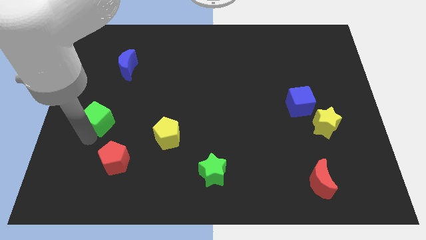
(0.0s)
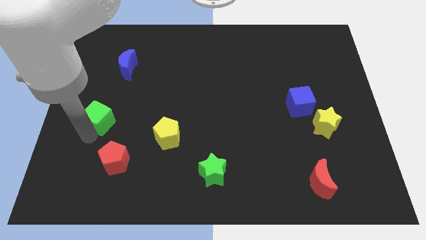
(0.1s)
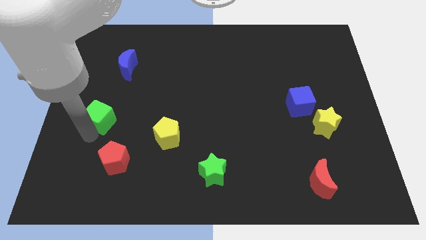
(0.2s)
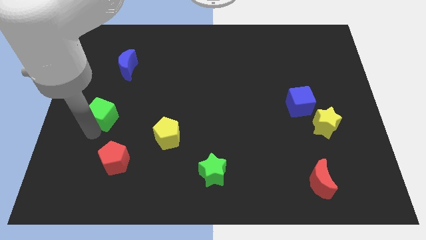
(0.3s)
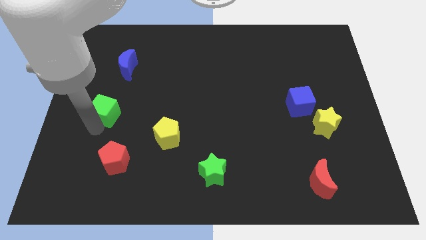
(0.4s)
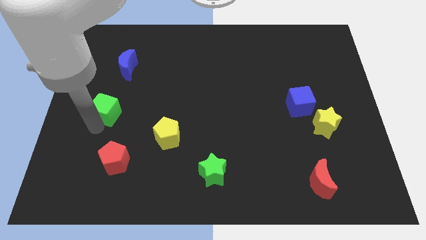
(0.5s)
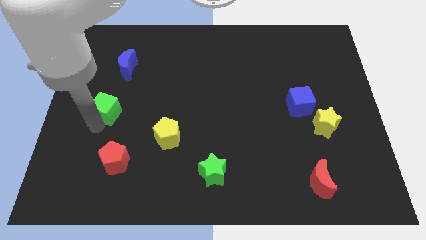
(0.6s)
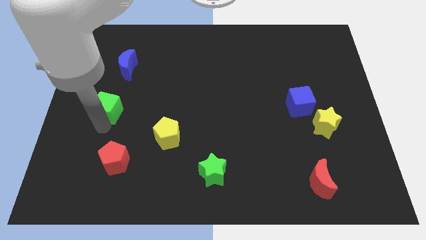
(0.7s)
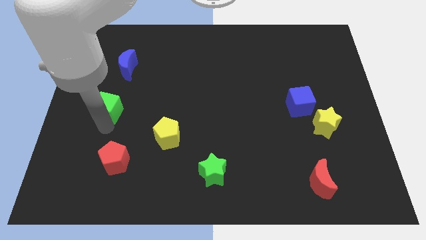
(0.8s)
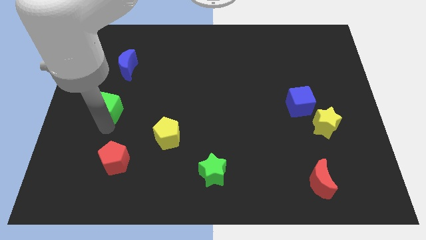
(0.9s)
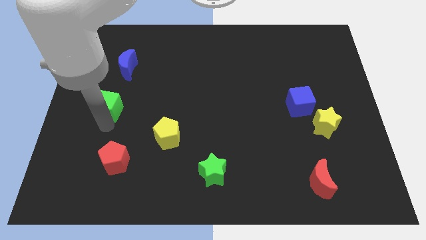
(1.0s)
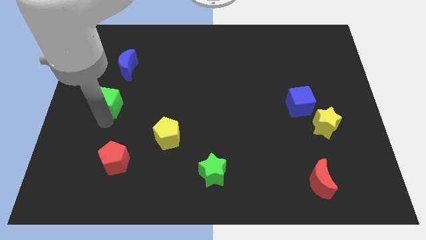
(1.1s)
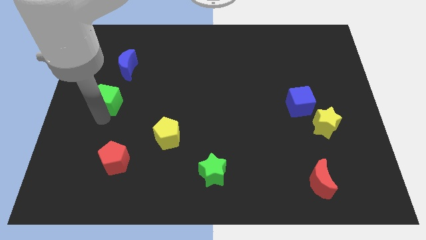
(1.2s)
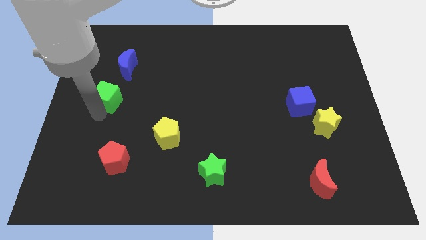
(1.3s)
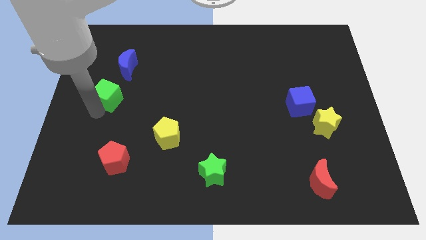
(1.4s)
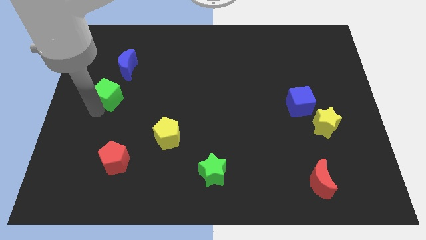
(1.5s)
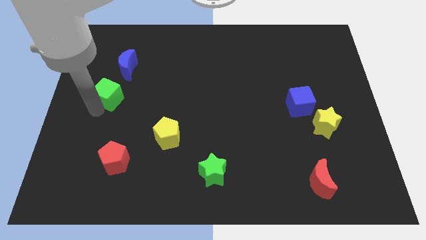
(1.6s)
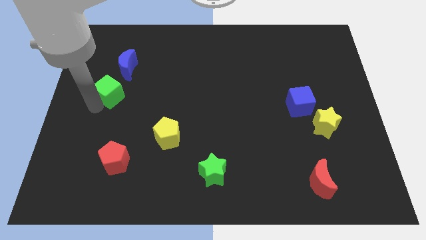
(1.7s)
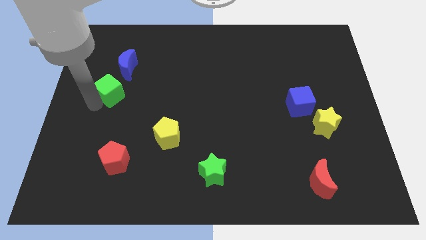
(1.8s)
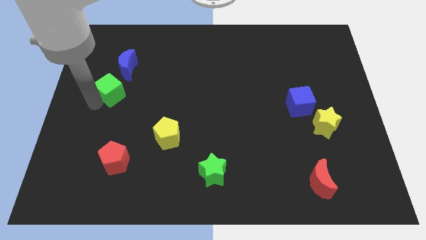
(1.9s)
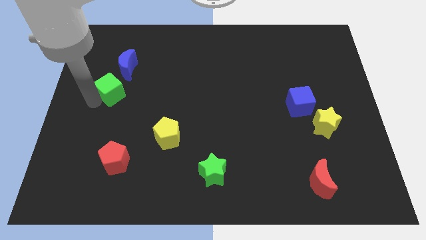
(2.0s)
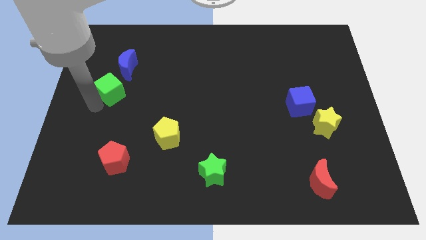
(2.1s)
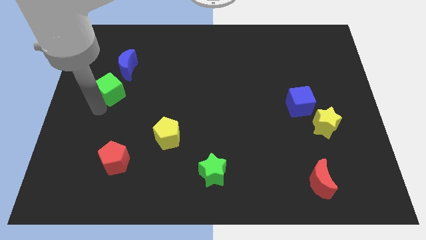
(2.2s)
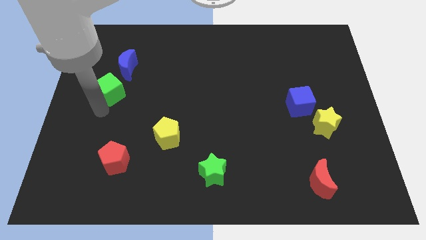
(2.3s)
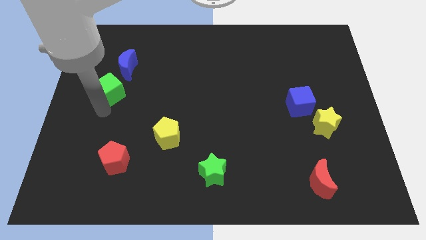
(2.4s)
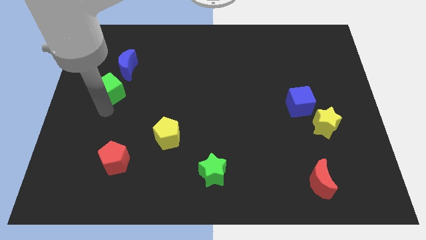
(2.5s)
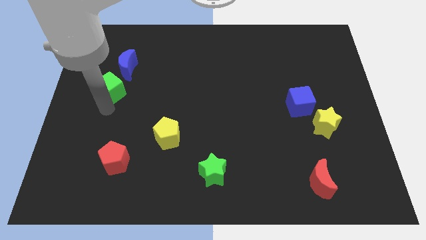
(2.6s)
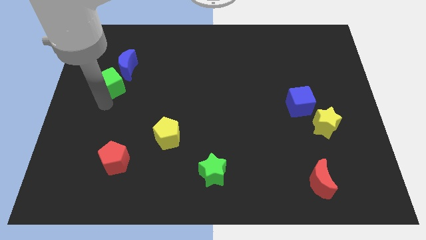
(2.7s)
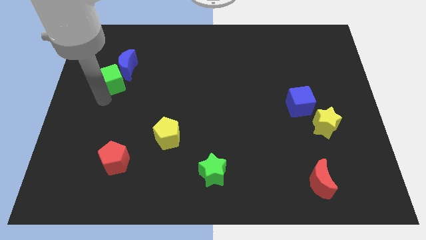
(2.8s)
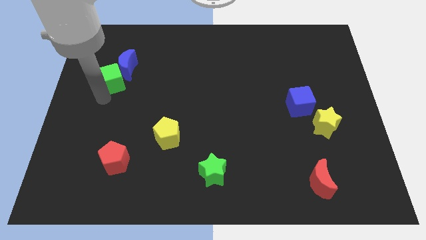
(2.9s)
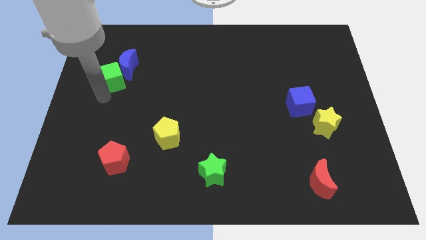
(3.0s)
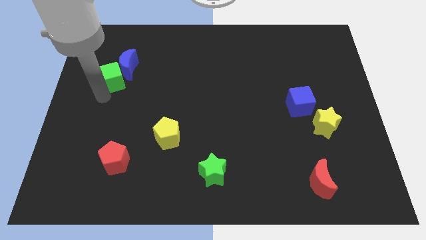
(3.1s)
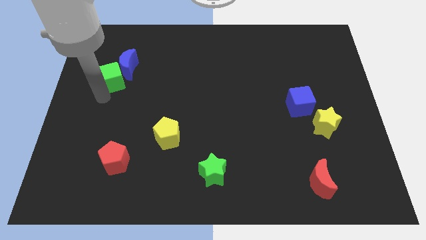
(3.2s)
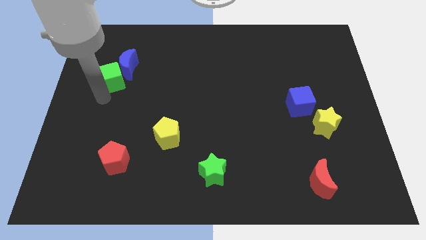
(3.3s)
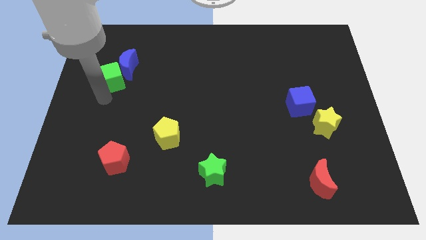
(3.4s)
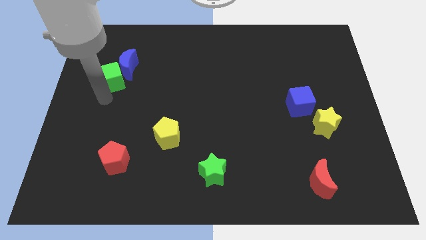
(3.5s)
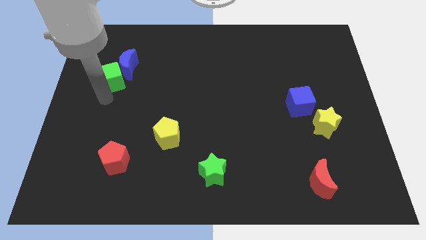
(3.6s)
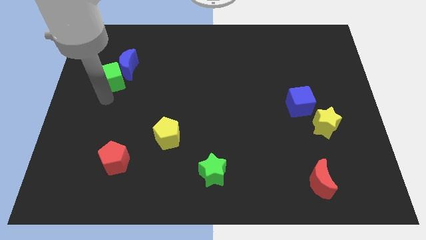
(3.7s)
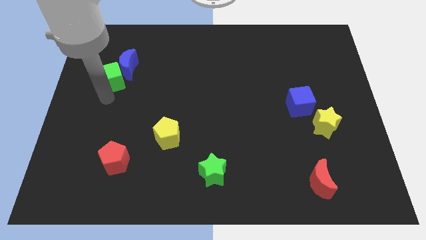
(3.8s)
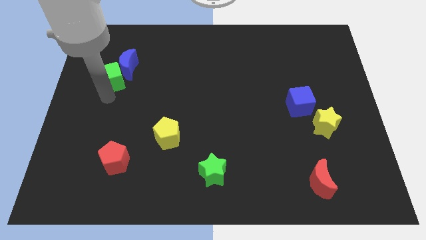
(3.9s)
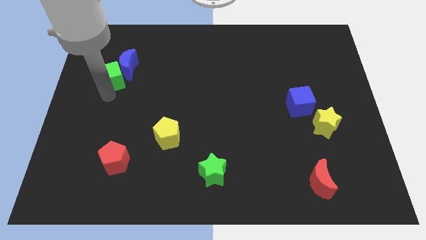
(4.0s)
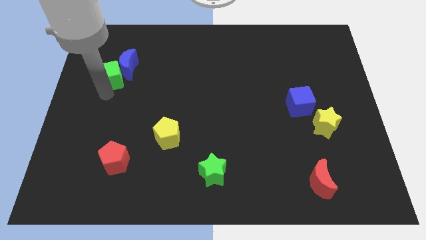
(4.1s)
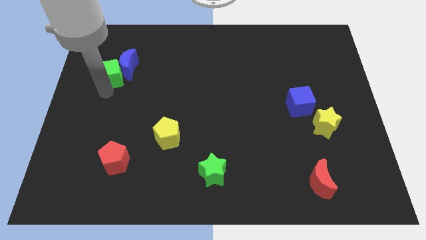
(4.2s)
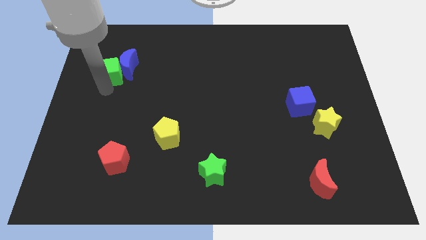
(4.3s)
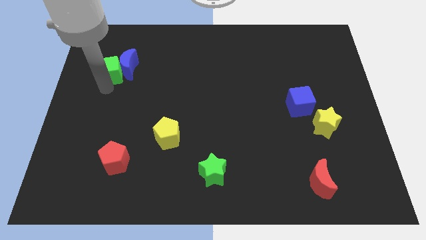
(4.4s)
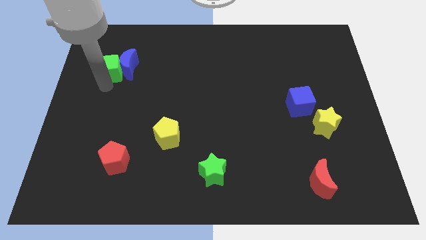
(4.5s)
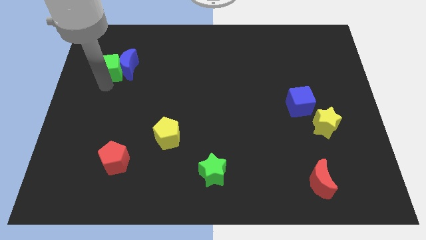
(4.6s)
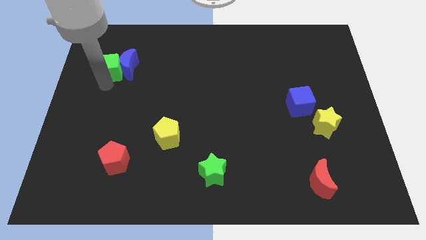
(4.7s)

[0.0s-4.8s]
move the green cube to the left of the blue crescent

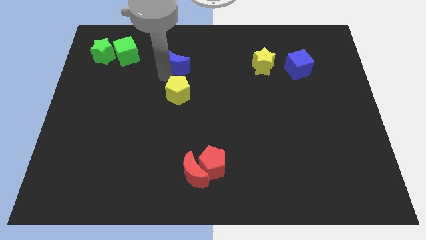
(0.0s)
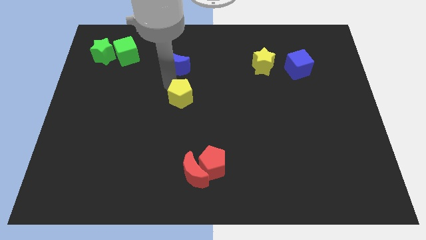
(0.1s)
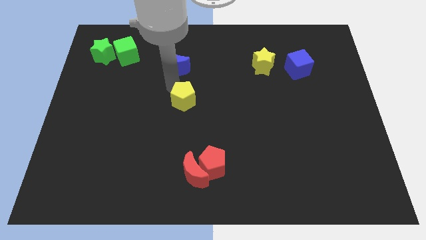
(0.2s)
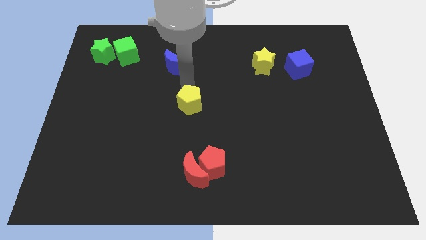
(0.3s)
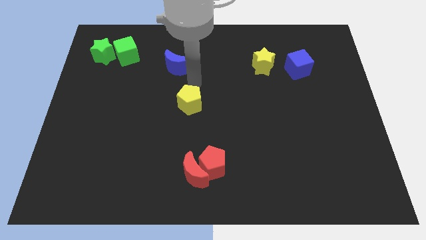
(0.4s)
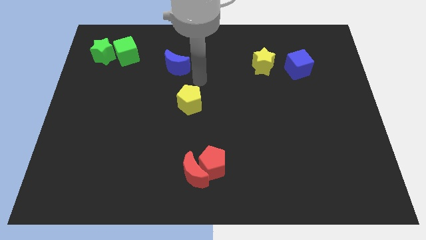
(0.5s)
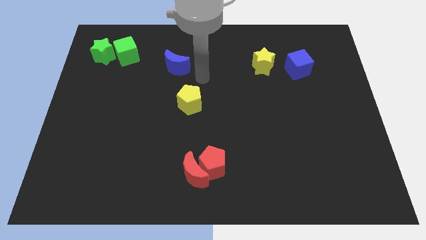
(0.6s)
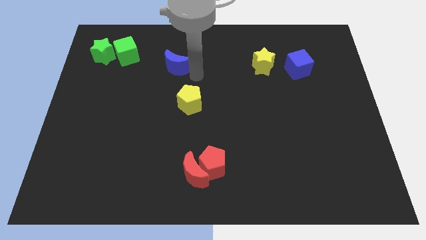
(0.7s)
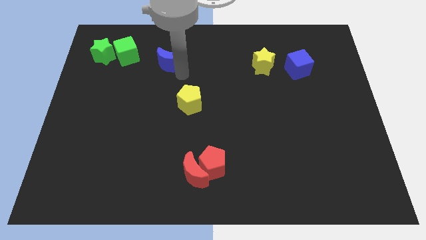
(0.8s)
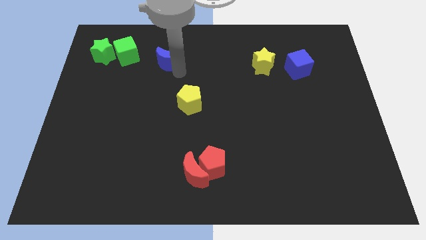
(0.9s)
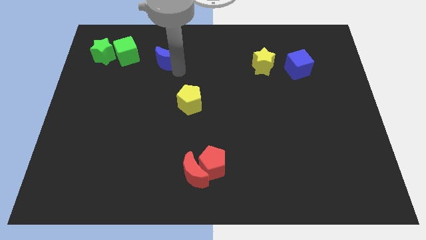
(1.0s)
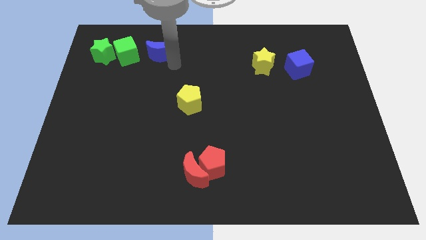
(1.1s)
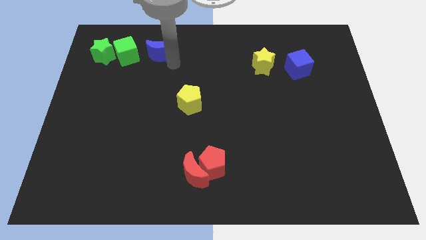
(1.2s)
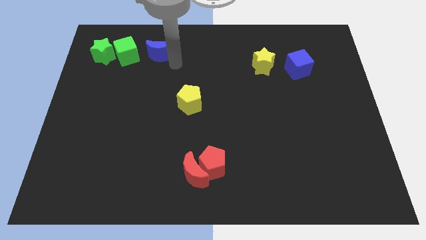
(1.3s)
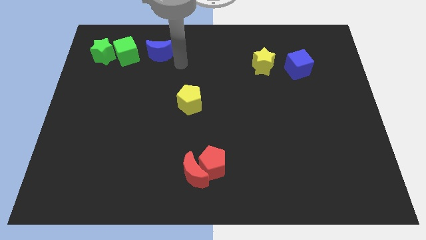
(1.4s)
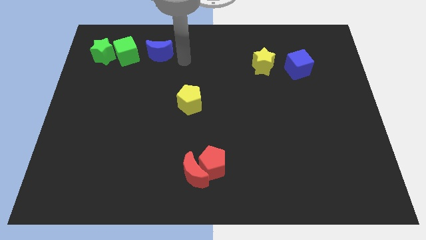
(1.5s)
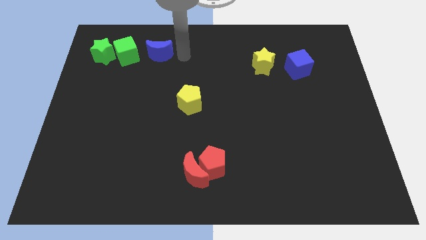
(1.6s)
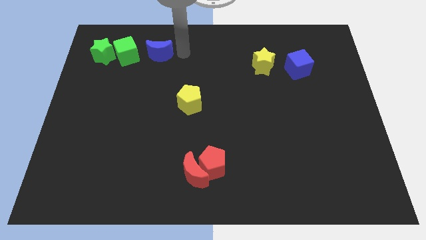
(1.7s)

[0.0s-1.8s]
place blue moon to the right of green cube

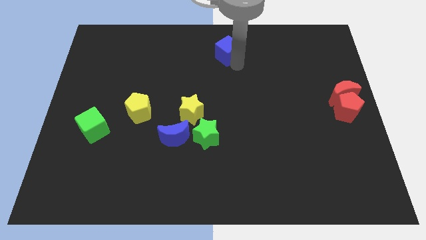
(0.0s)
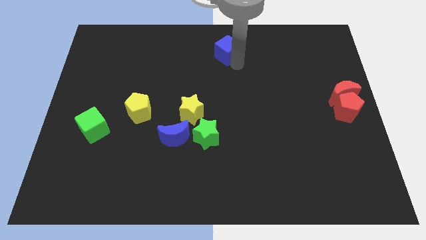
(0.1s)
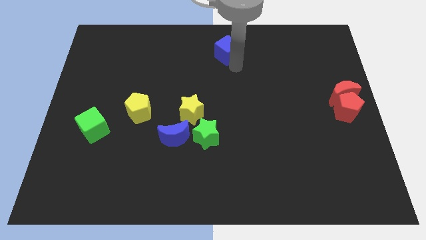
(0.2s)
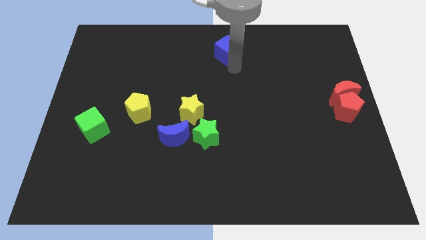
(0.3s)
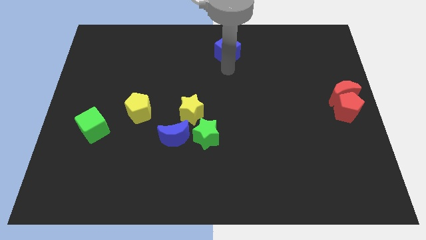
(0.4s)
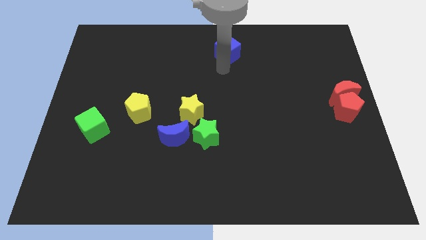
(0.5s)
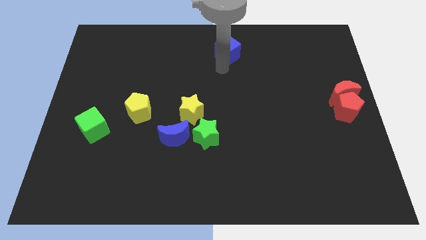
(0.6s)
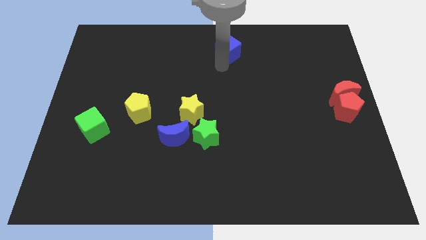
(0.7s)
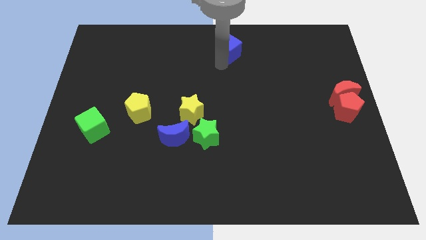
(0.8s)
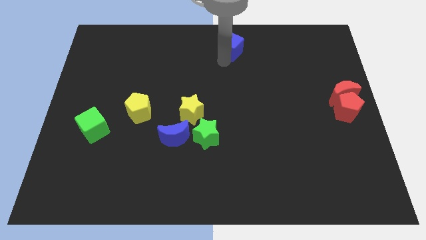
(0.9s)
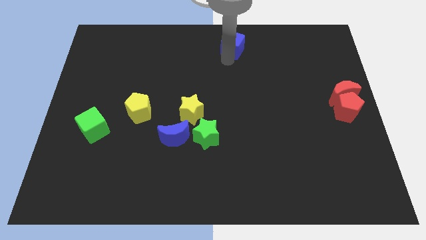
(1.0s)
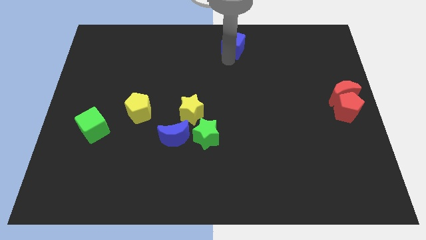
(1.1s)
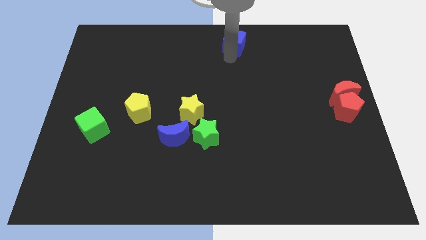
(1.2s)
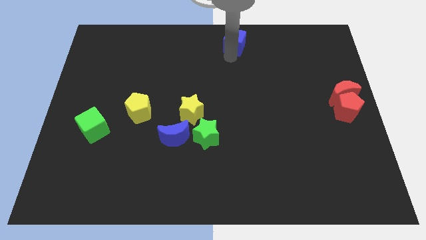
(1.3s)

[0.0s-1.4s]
place blue cube to the top center of the board

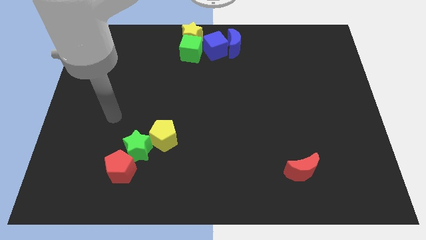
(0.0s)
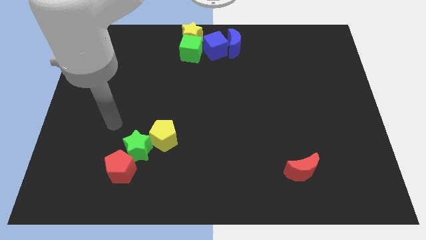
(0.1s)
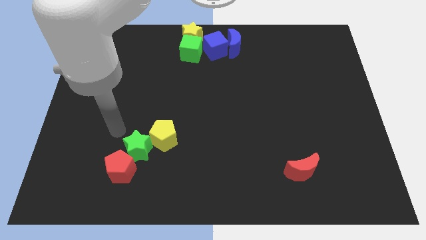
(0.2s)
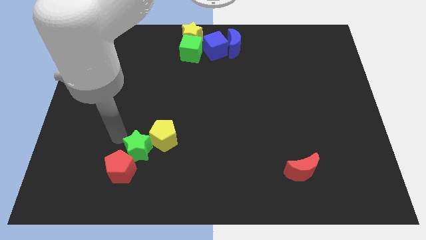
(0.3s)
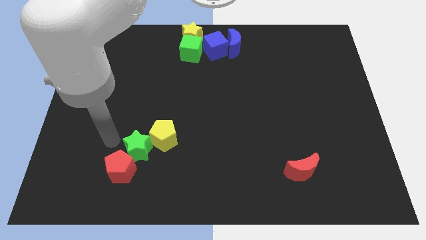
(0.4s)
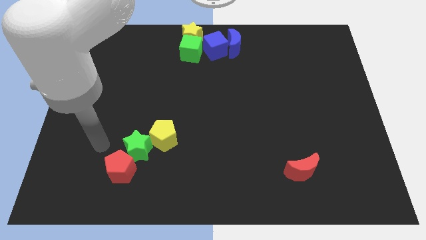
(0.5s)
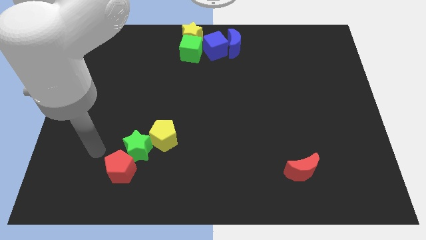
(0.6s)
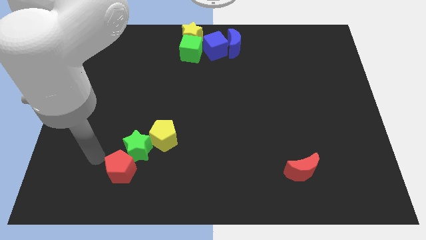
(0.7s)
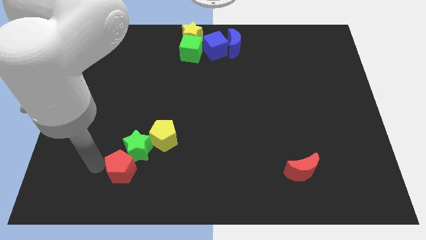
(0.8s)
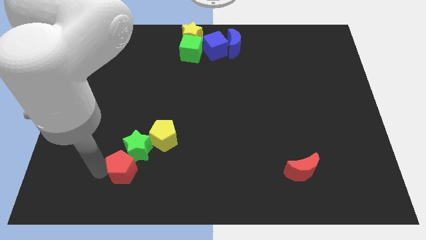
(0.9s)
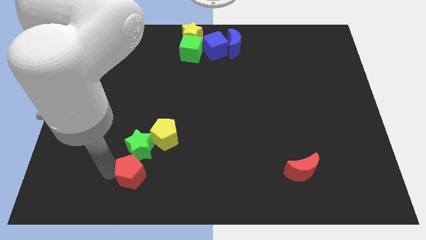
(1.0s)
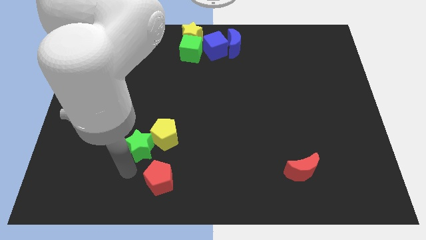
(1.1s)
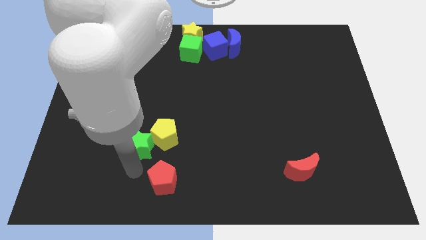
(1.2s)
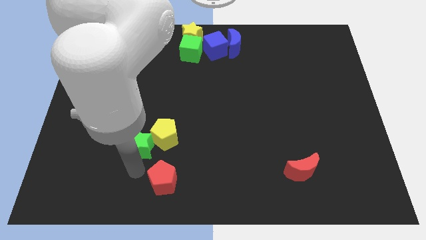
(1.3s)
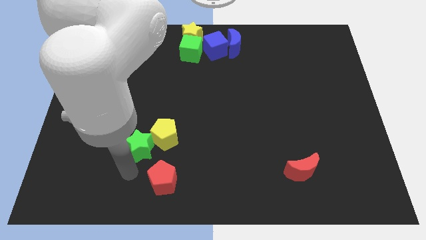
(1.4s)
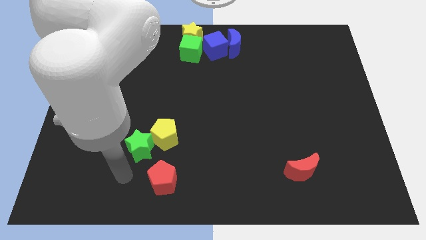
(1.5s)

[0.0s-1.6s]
separate red pentagon from green star
